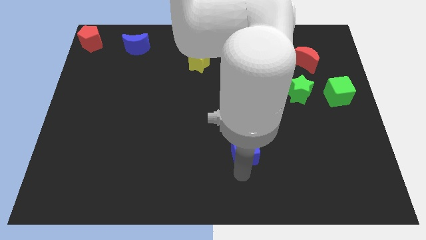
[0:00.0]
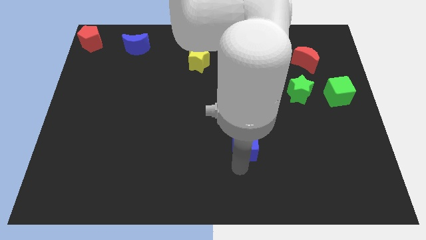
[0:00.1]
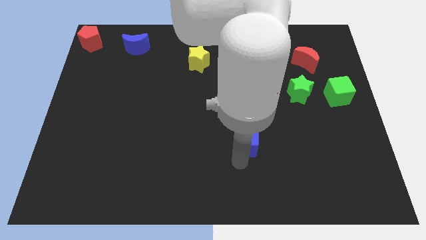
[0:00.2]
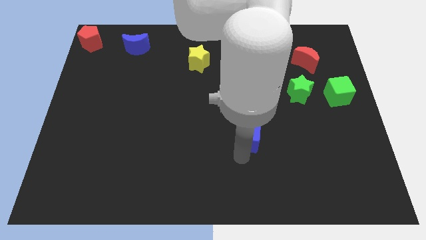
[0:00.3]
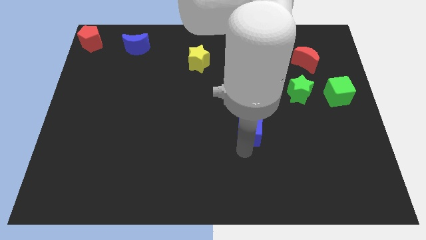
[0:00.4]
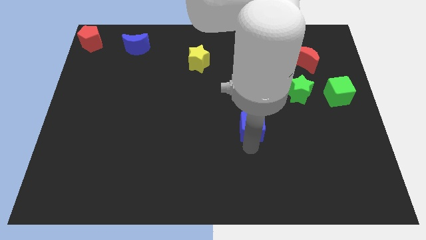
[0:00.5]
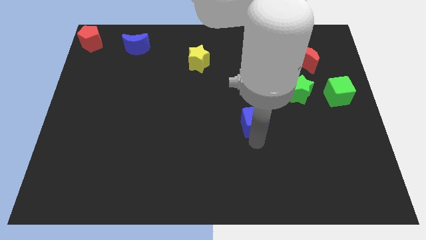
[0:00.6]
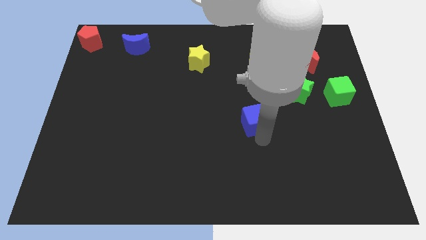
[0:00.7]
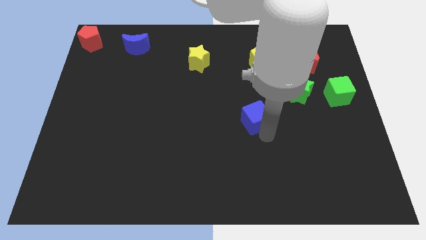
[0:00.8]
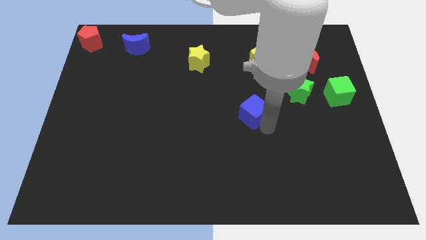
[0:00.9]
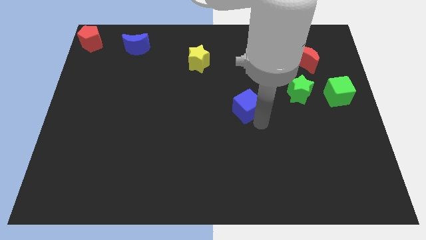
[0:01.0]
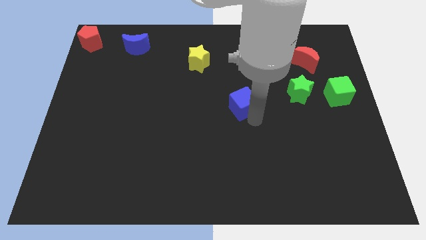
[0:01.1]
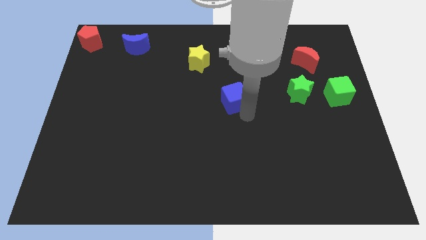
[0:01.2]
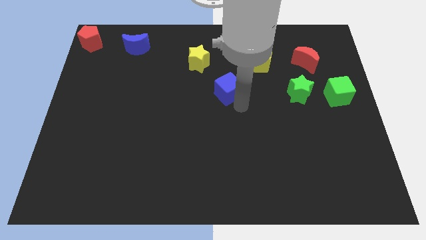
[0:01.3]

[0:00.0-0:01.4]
move blue cube parallel left to the green star

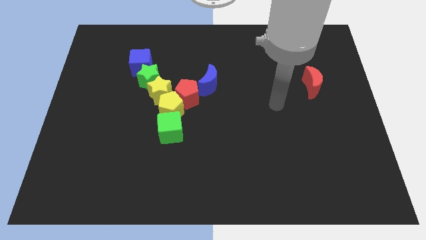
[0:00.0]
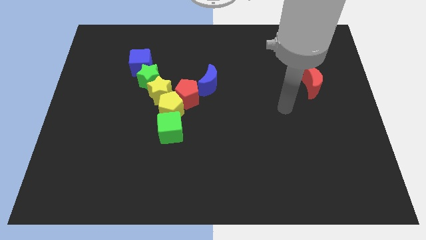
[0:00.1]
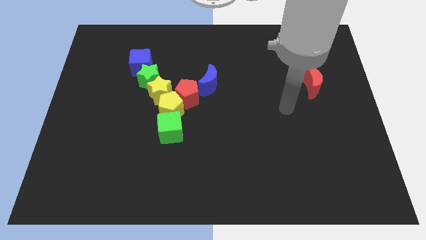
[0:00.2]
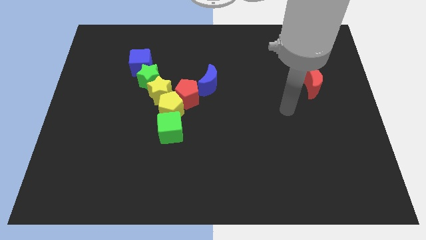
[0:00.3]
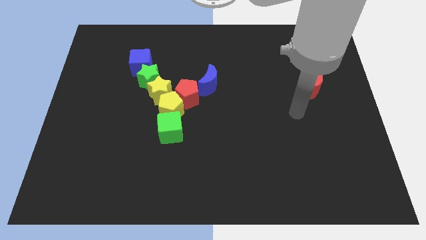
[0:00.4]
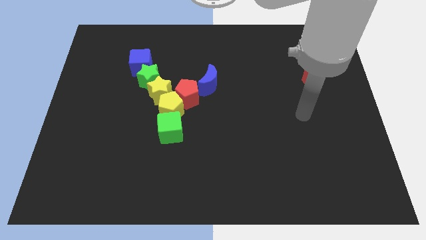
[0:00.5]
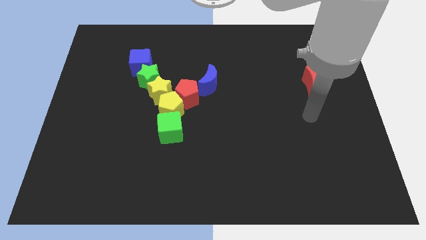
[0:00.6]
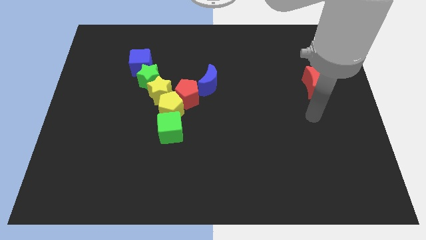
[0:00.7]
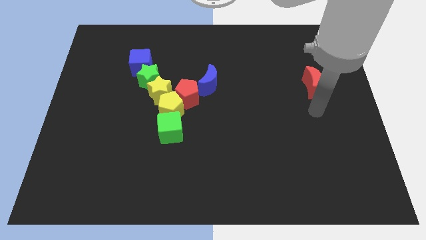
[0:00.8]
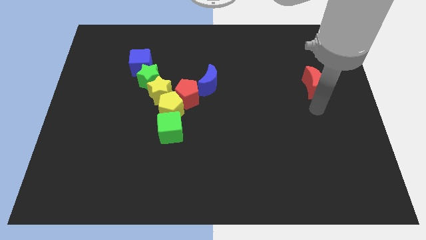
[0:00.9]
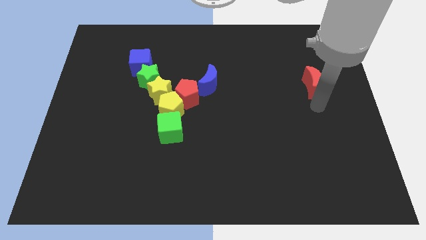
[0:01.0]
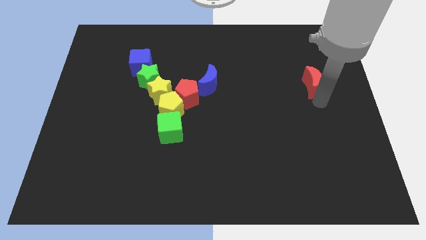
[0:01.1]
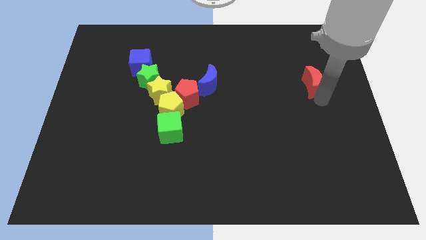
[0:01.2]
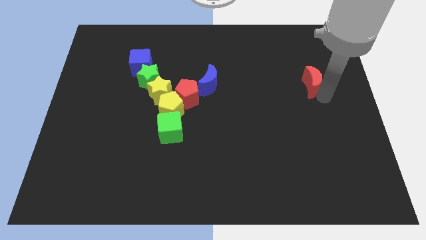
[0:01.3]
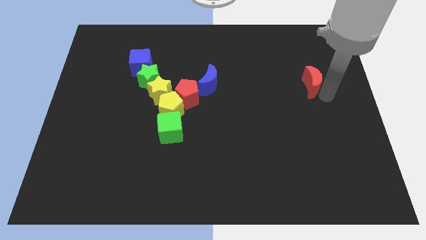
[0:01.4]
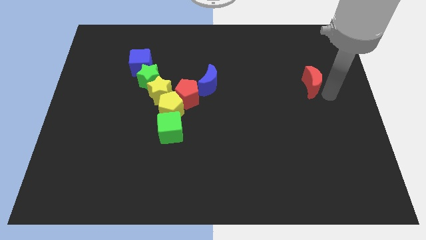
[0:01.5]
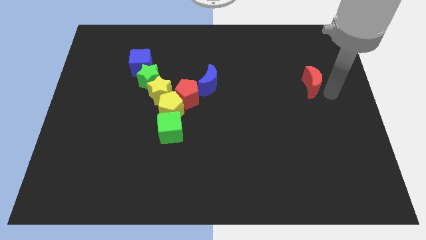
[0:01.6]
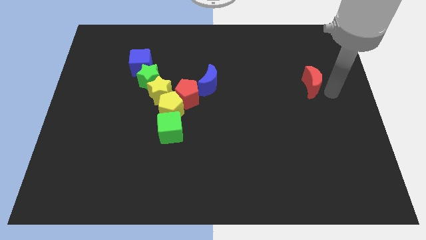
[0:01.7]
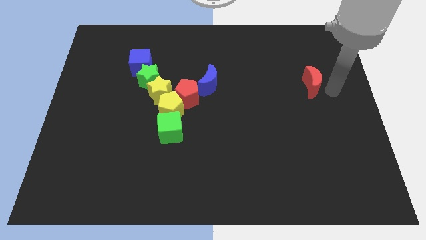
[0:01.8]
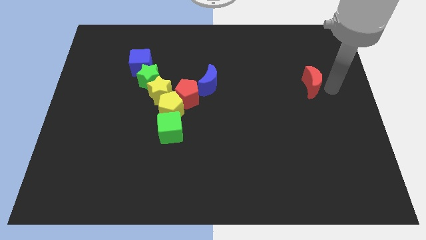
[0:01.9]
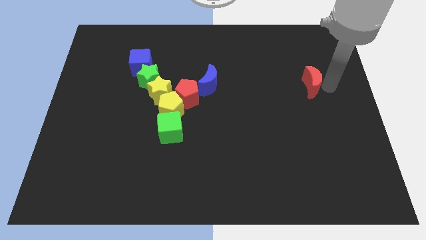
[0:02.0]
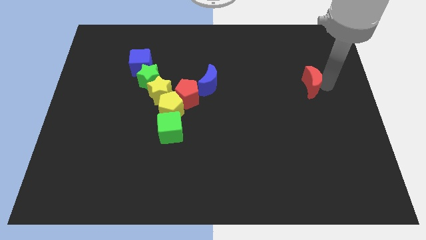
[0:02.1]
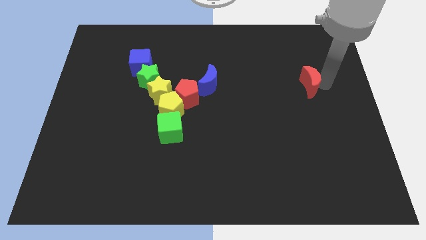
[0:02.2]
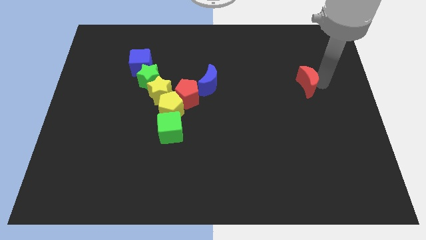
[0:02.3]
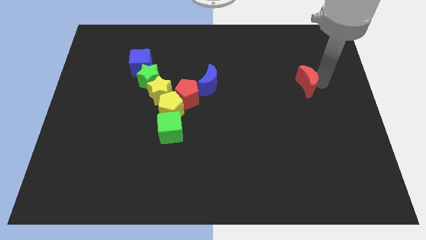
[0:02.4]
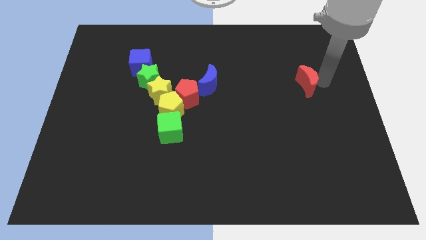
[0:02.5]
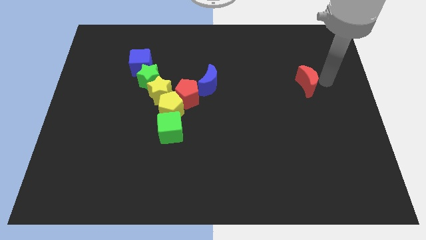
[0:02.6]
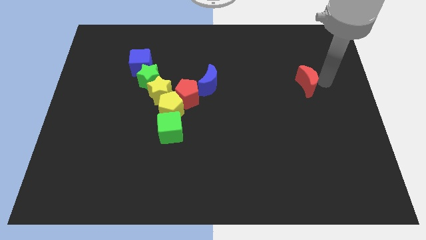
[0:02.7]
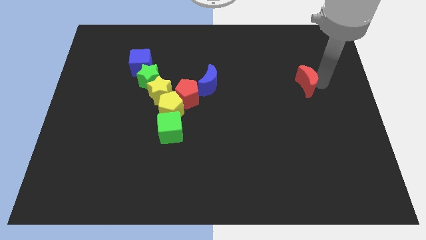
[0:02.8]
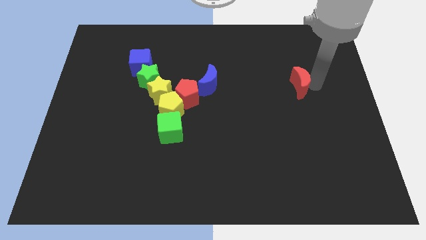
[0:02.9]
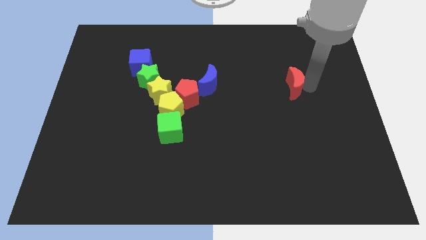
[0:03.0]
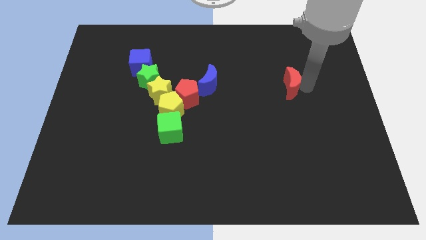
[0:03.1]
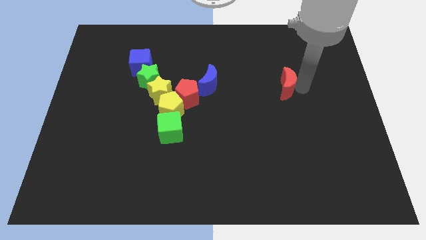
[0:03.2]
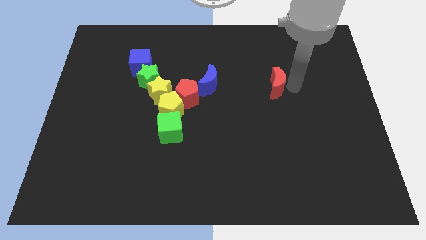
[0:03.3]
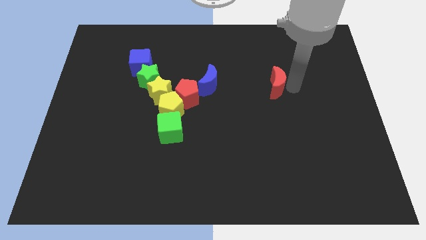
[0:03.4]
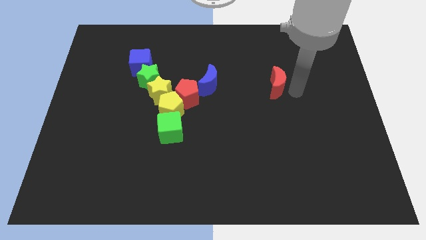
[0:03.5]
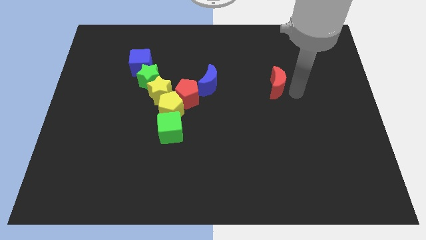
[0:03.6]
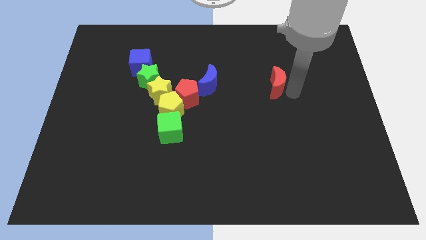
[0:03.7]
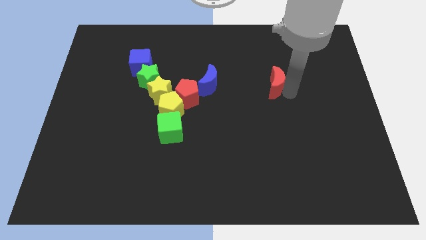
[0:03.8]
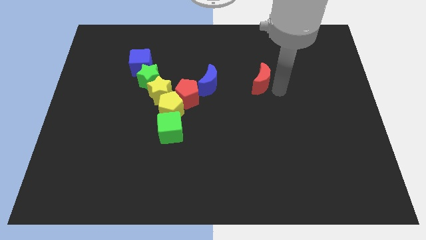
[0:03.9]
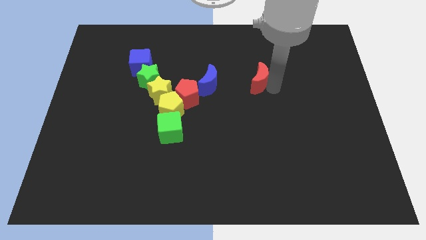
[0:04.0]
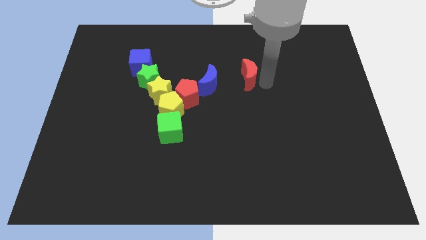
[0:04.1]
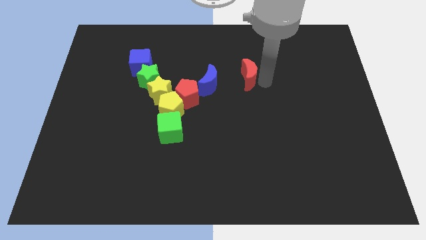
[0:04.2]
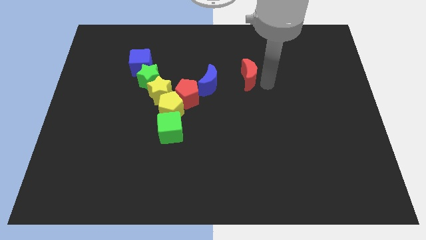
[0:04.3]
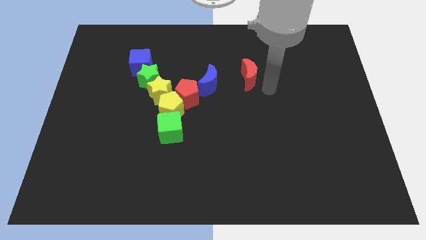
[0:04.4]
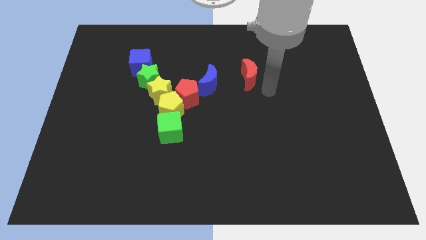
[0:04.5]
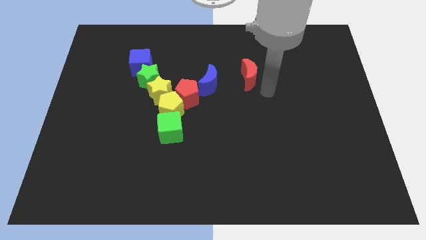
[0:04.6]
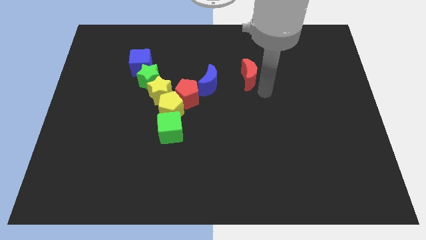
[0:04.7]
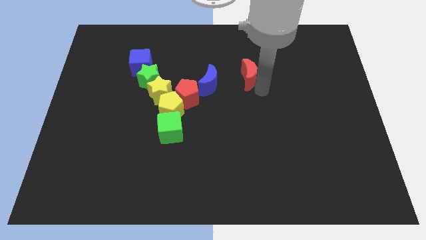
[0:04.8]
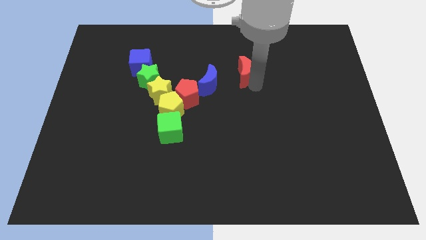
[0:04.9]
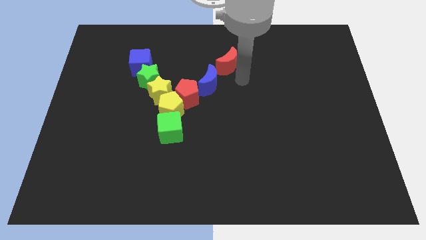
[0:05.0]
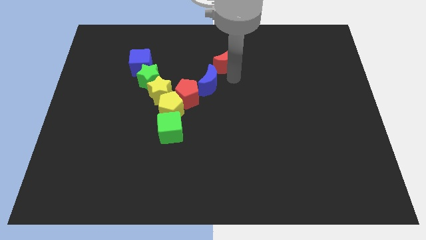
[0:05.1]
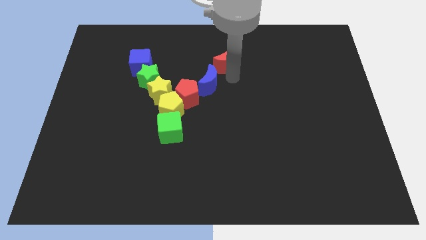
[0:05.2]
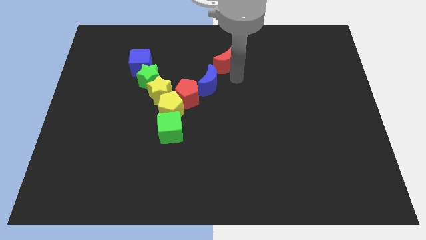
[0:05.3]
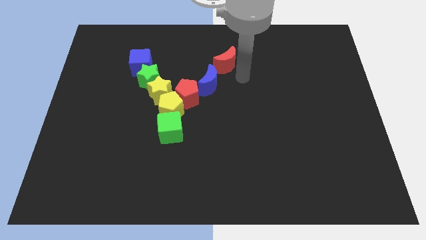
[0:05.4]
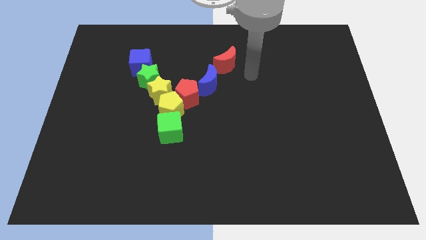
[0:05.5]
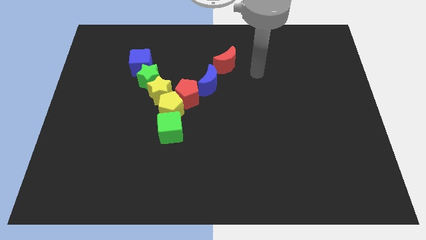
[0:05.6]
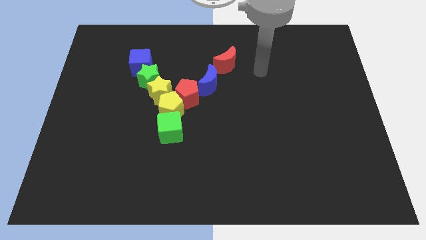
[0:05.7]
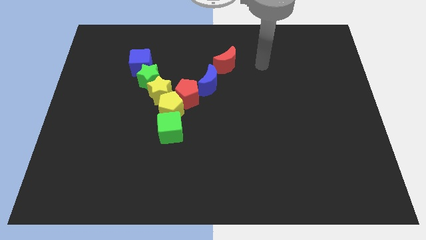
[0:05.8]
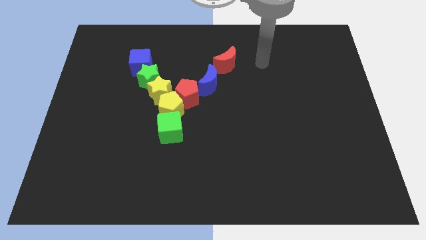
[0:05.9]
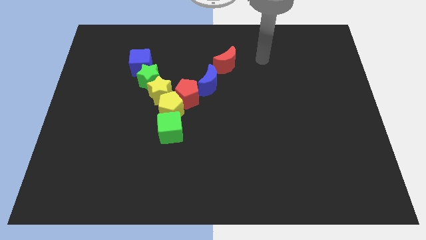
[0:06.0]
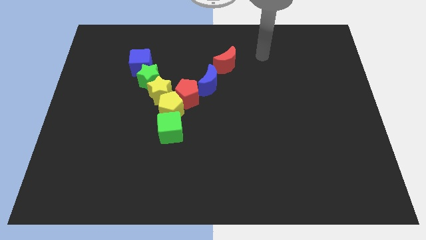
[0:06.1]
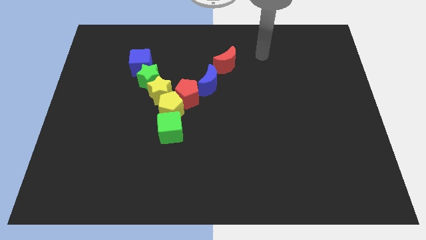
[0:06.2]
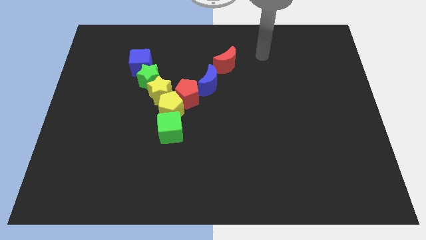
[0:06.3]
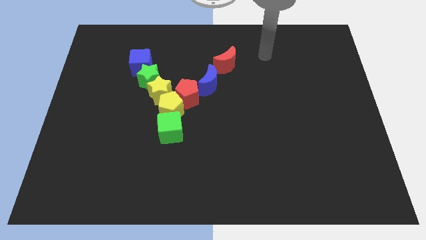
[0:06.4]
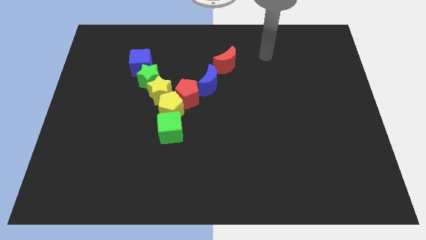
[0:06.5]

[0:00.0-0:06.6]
slide the crescent into the group of blocks

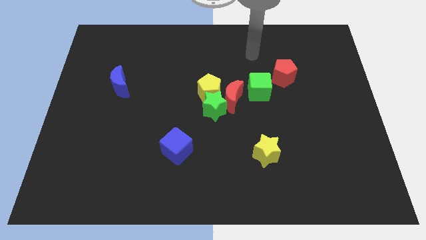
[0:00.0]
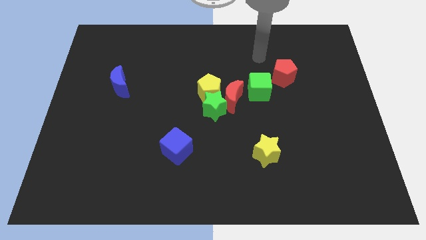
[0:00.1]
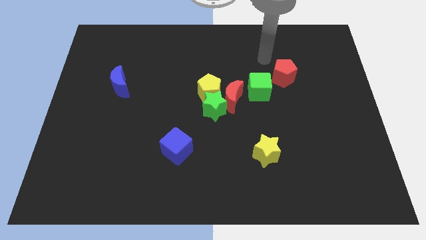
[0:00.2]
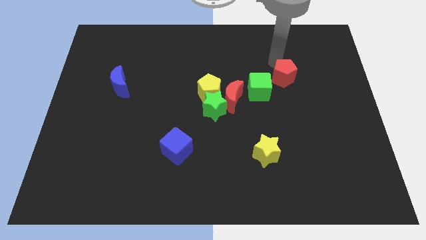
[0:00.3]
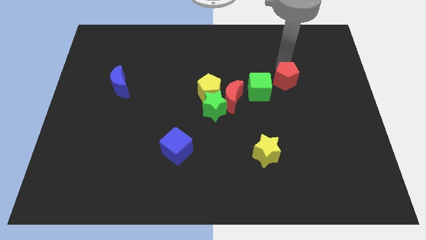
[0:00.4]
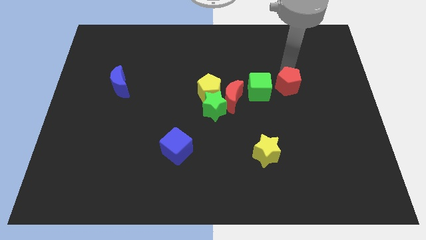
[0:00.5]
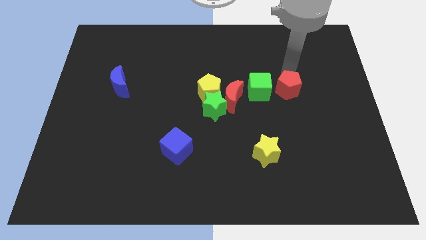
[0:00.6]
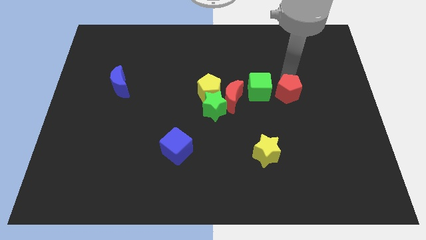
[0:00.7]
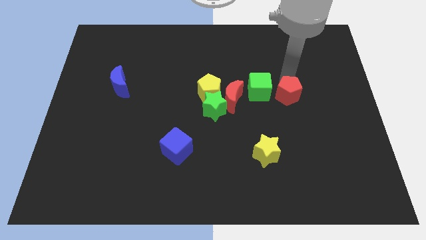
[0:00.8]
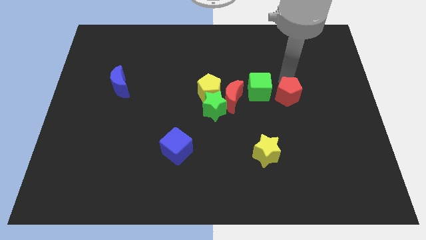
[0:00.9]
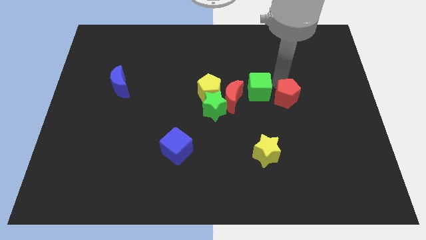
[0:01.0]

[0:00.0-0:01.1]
push the red pentagon to the bottom right side of the green cube
